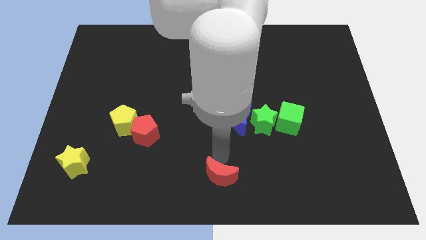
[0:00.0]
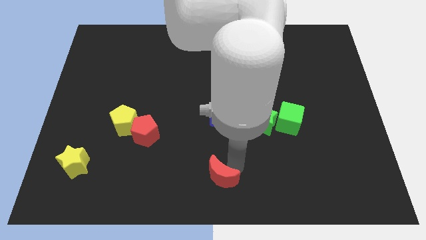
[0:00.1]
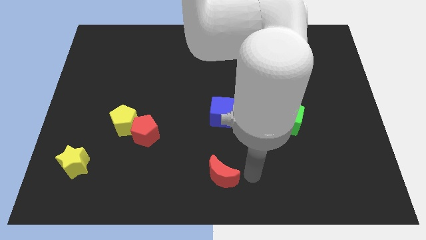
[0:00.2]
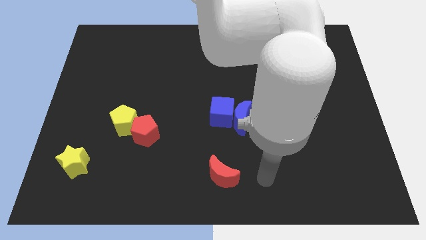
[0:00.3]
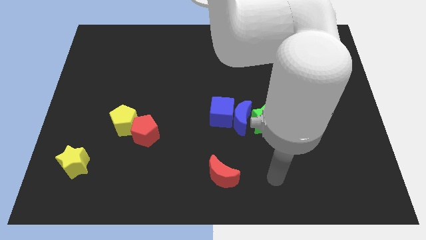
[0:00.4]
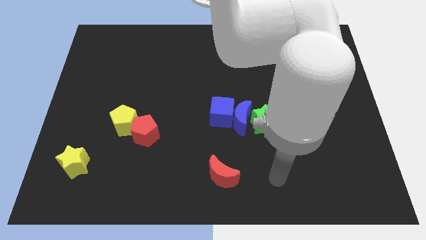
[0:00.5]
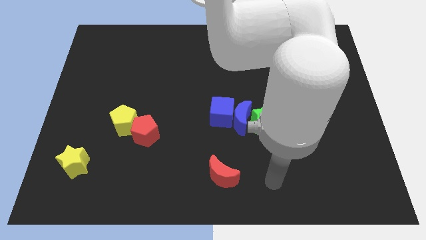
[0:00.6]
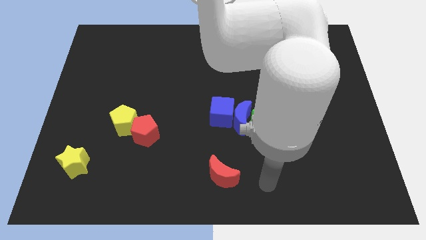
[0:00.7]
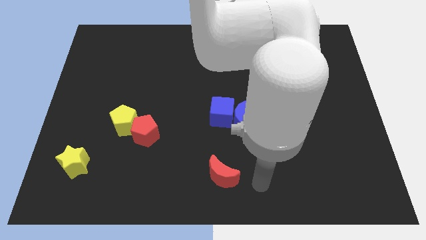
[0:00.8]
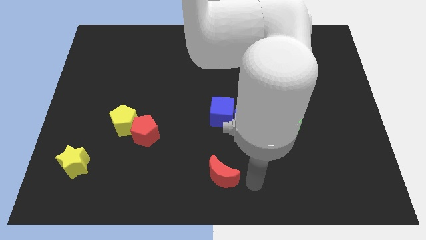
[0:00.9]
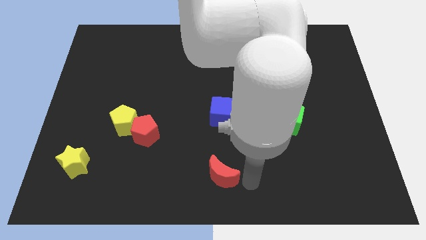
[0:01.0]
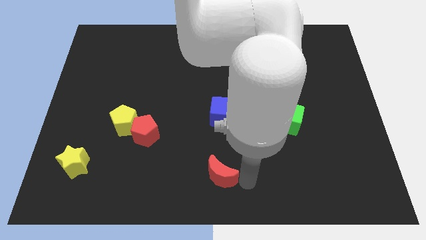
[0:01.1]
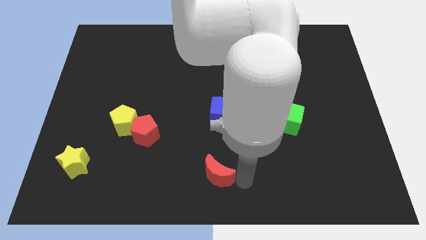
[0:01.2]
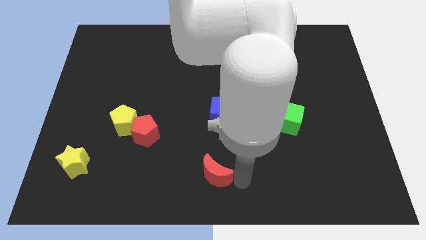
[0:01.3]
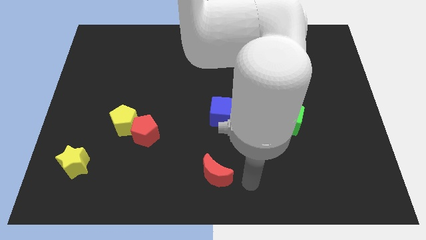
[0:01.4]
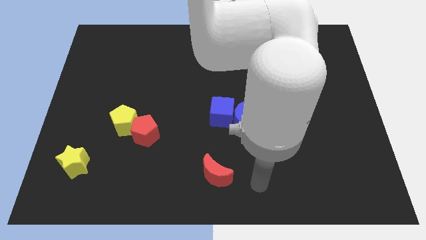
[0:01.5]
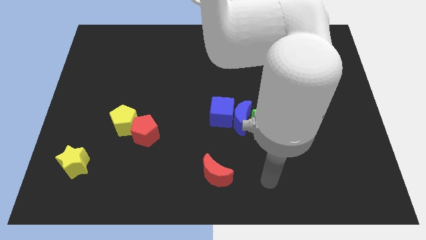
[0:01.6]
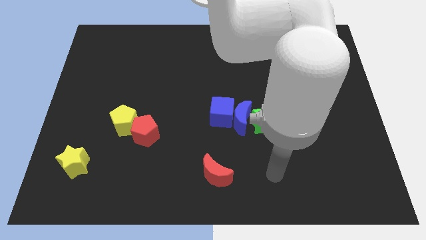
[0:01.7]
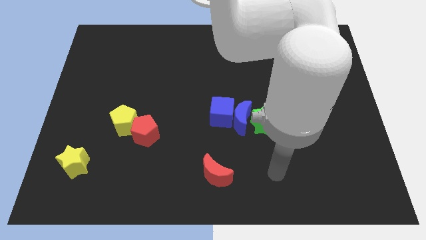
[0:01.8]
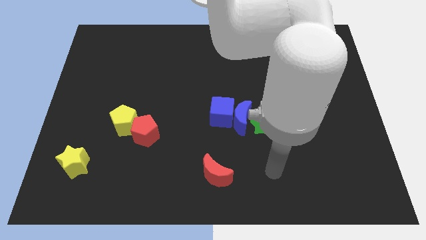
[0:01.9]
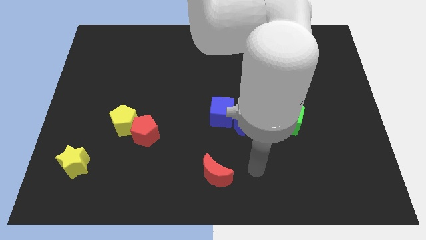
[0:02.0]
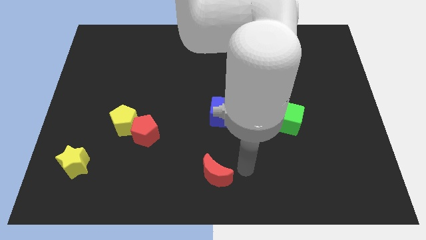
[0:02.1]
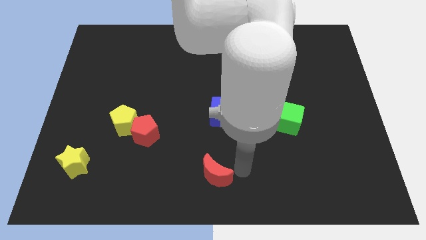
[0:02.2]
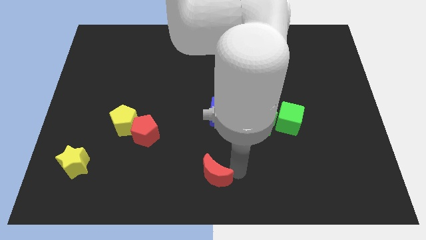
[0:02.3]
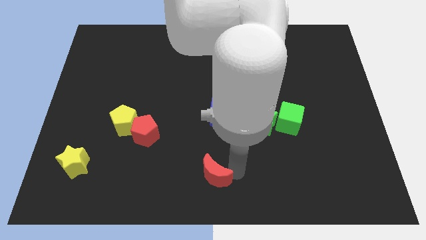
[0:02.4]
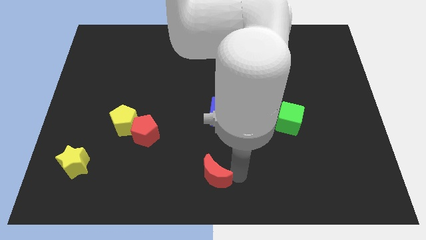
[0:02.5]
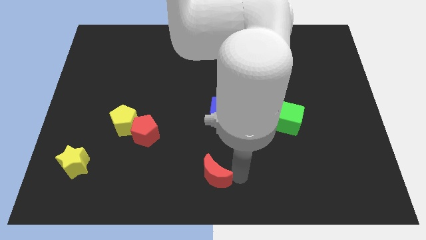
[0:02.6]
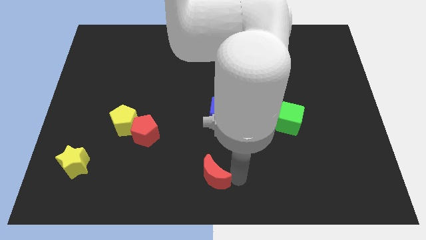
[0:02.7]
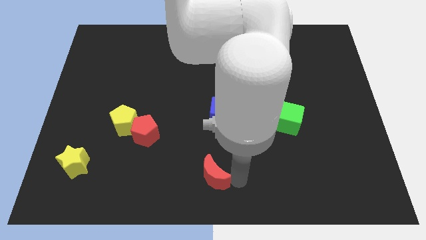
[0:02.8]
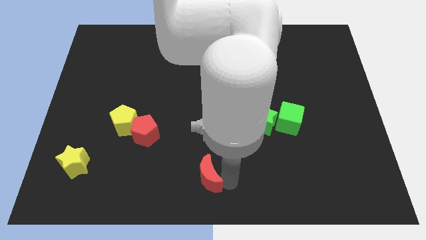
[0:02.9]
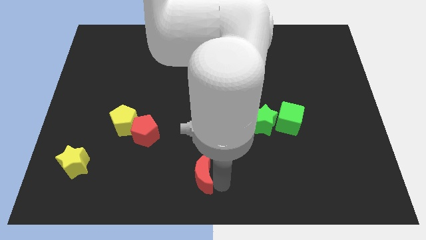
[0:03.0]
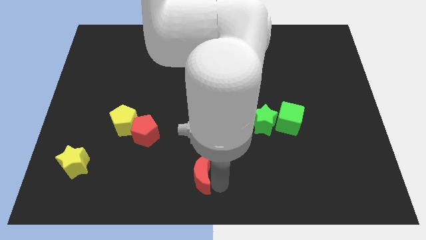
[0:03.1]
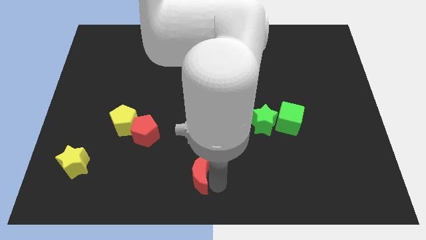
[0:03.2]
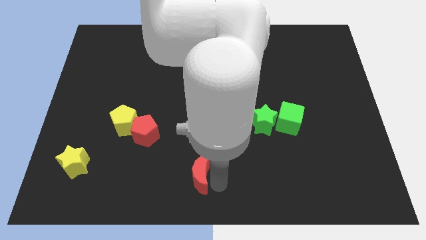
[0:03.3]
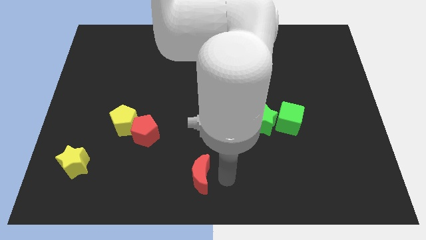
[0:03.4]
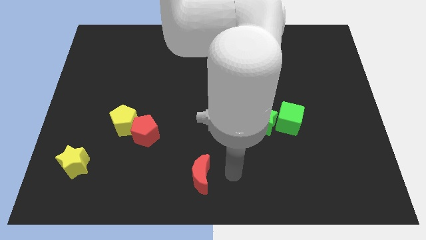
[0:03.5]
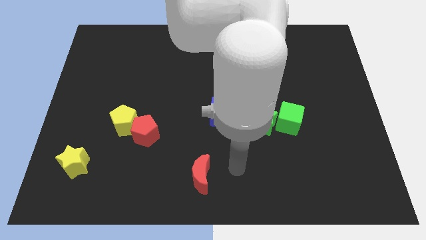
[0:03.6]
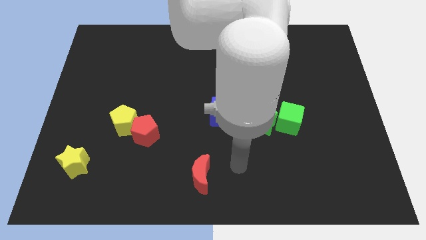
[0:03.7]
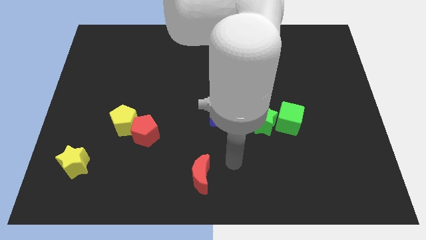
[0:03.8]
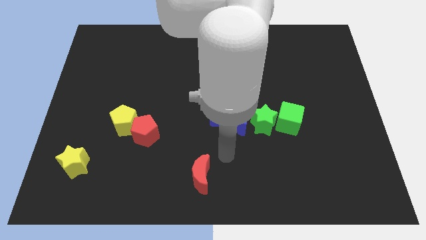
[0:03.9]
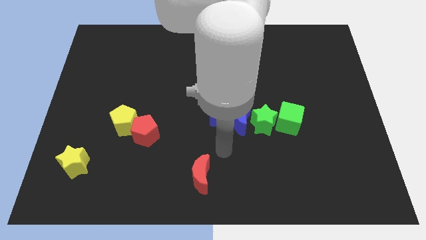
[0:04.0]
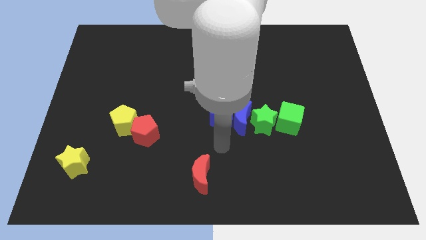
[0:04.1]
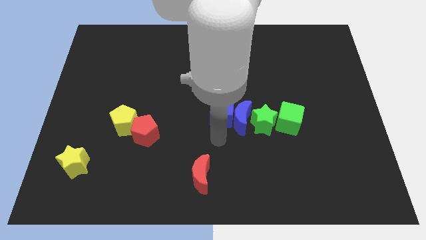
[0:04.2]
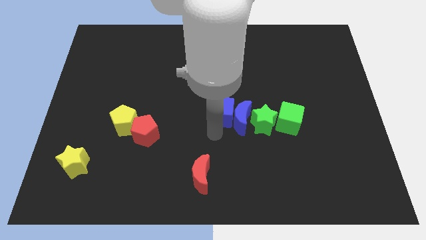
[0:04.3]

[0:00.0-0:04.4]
push the red crescent towards left a bit

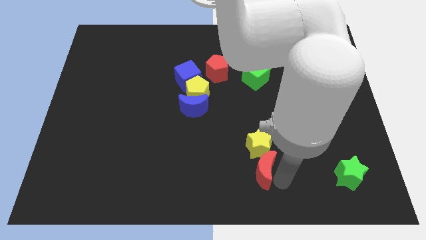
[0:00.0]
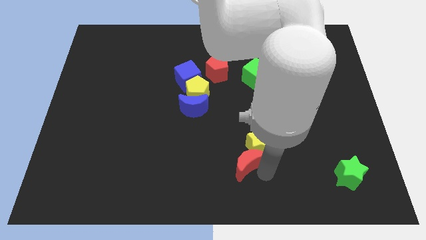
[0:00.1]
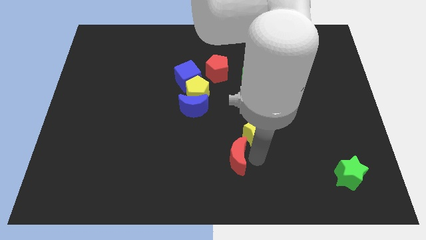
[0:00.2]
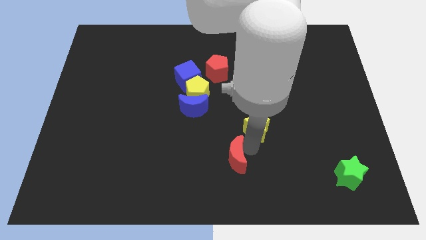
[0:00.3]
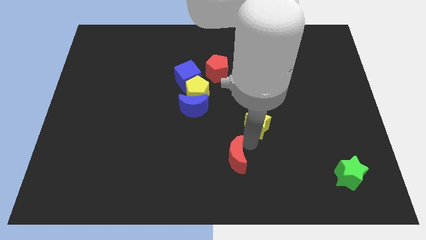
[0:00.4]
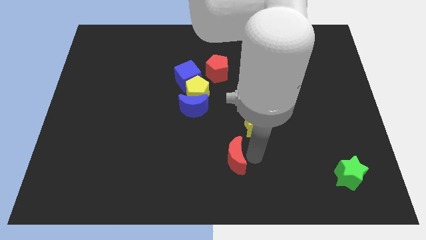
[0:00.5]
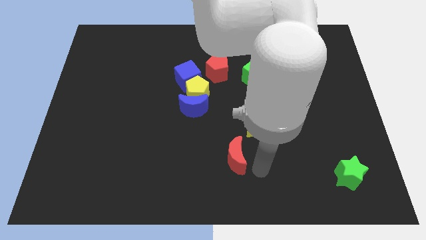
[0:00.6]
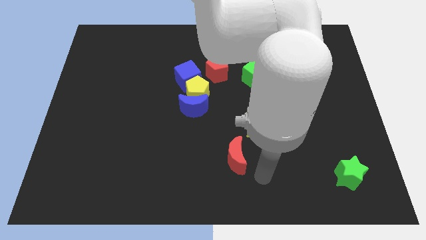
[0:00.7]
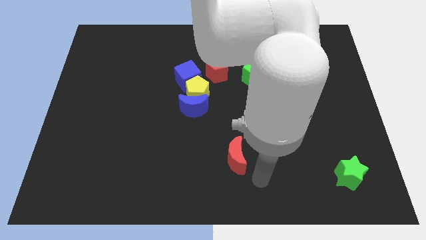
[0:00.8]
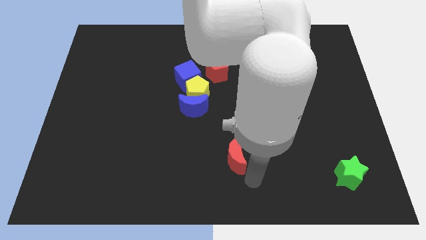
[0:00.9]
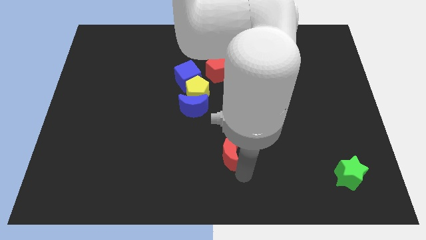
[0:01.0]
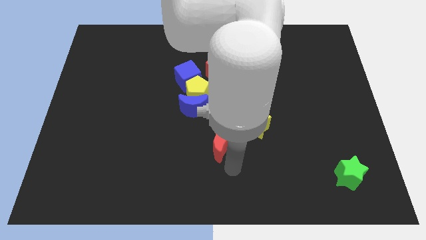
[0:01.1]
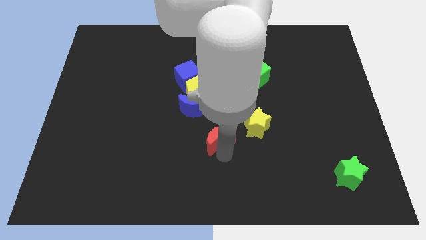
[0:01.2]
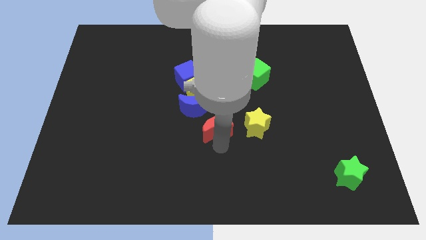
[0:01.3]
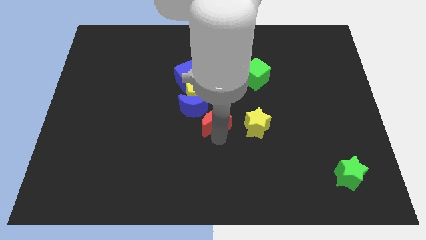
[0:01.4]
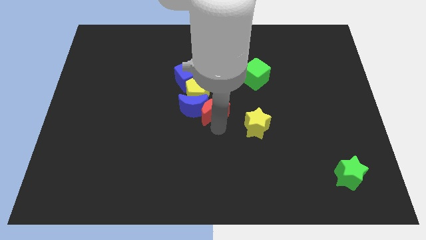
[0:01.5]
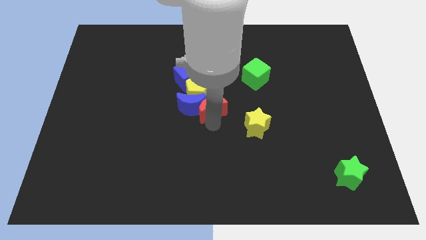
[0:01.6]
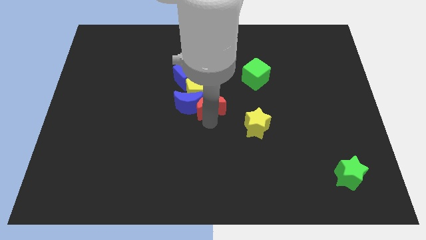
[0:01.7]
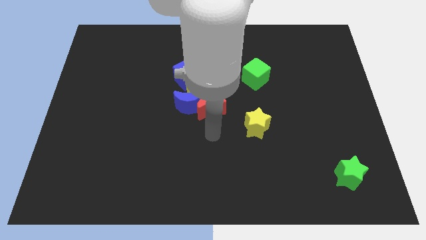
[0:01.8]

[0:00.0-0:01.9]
move the red crescent close to the blue crescent

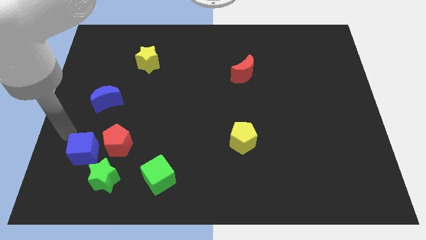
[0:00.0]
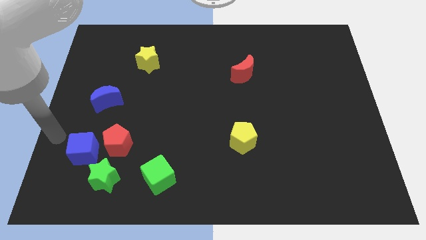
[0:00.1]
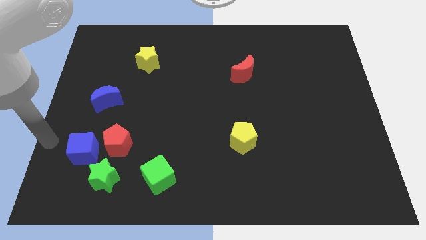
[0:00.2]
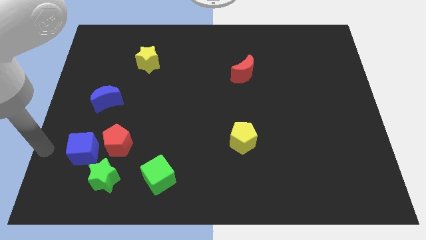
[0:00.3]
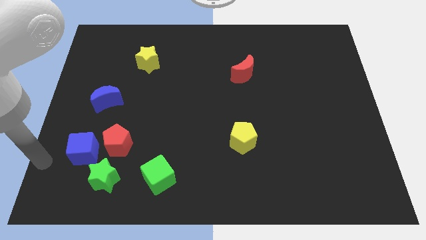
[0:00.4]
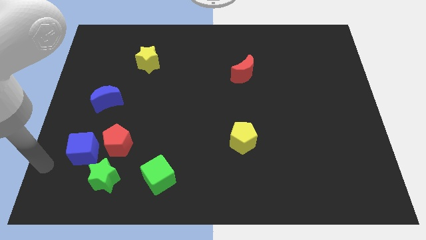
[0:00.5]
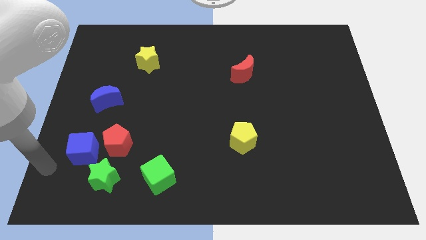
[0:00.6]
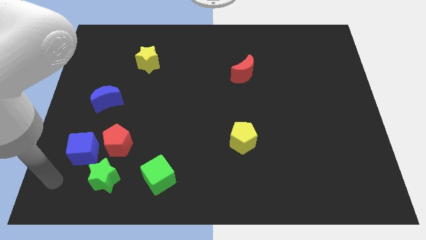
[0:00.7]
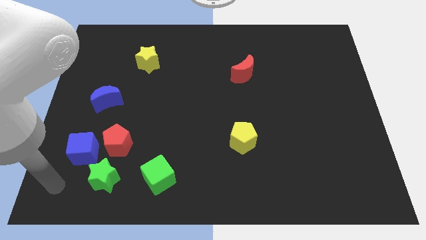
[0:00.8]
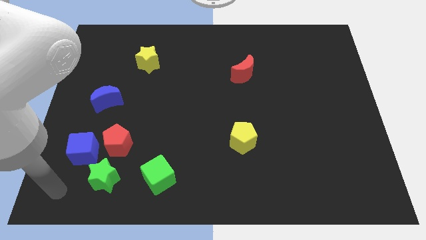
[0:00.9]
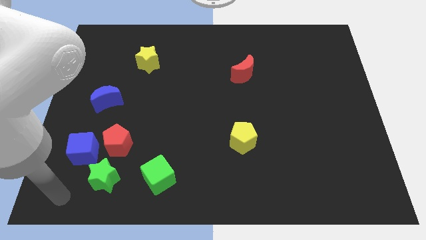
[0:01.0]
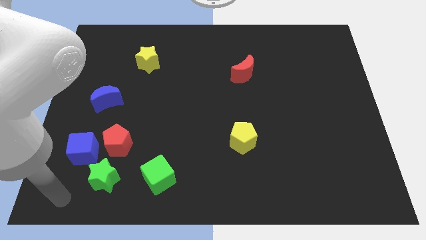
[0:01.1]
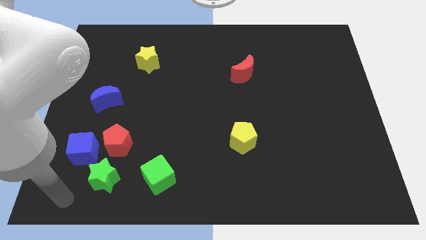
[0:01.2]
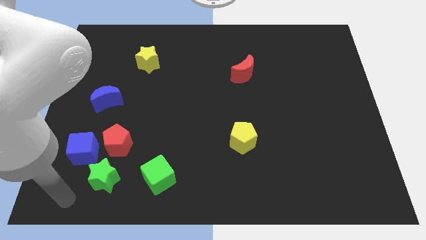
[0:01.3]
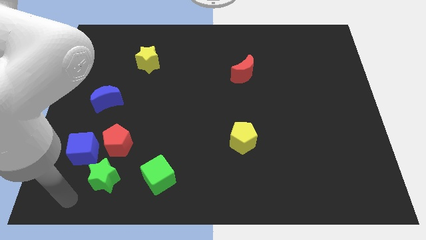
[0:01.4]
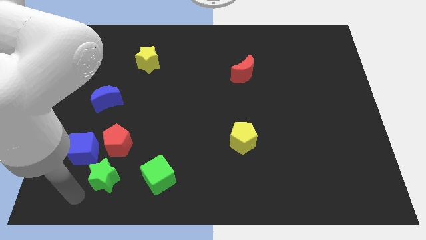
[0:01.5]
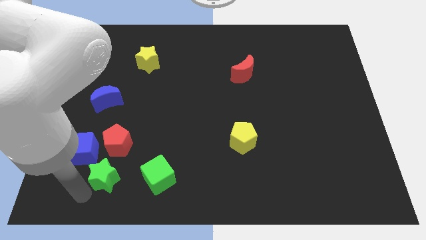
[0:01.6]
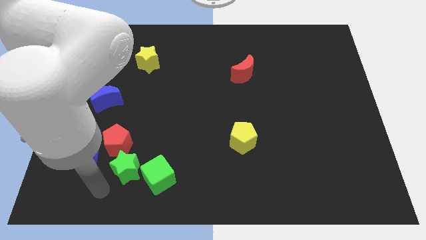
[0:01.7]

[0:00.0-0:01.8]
go near green star

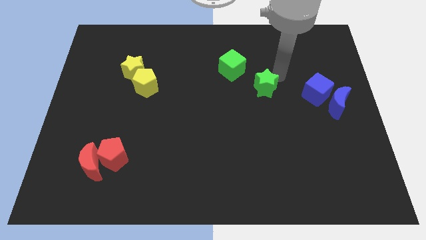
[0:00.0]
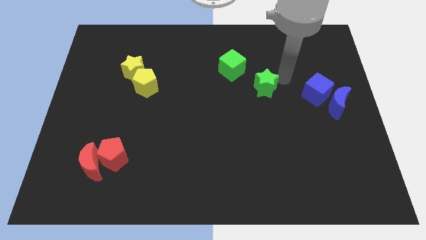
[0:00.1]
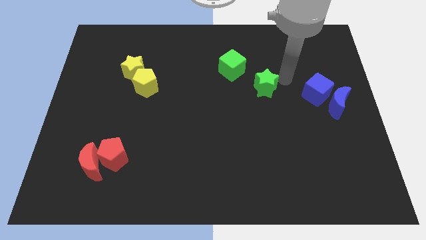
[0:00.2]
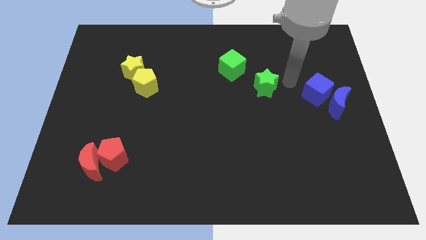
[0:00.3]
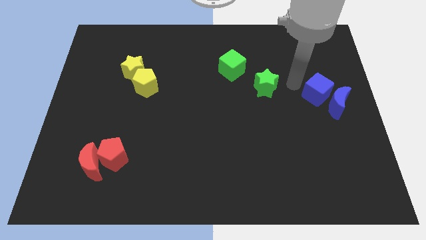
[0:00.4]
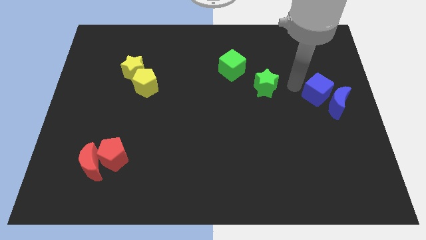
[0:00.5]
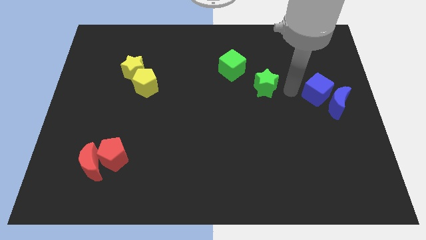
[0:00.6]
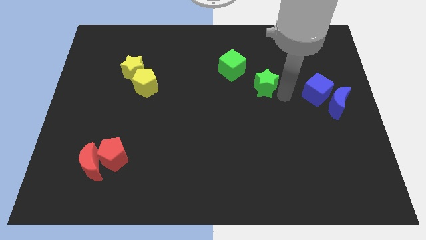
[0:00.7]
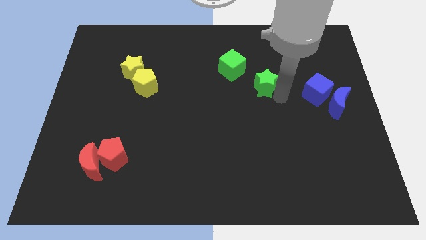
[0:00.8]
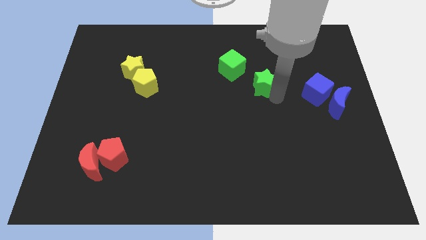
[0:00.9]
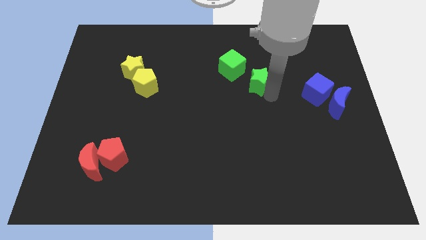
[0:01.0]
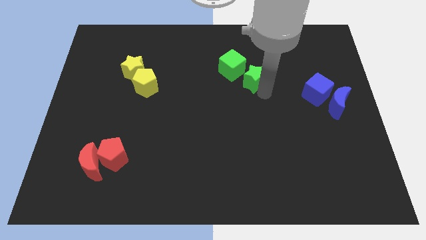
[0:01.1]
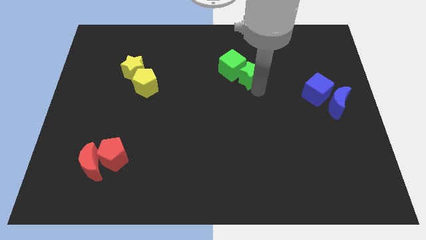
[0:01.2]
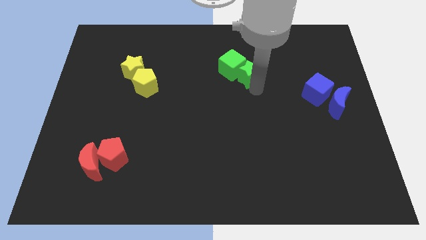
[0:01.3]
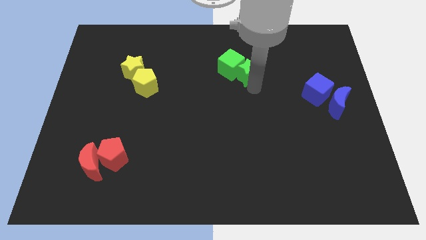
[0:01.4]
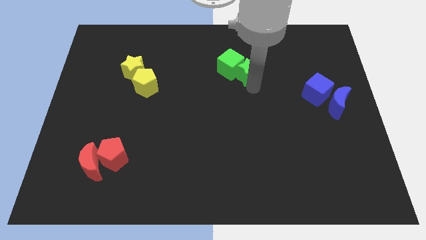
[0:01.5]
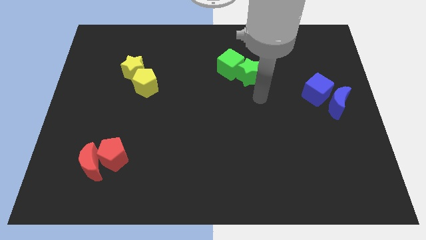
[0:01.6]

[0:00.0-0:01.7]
push green star in to green cube
